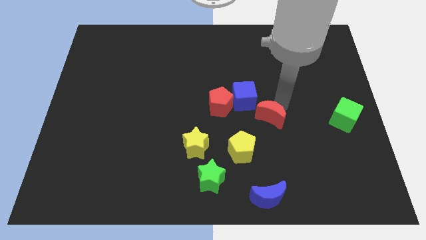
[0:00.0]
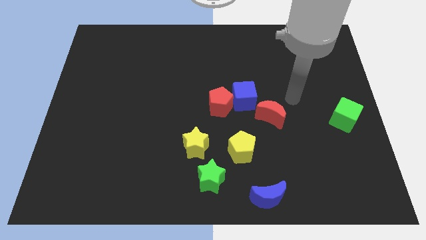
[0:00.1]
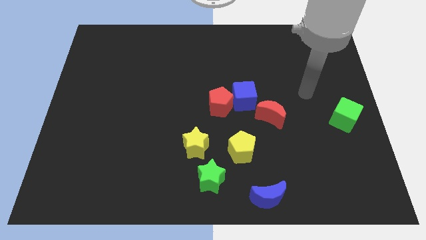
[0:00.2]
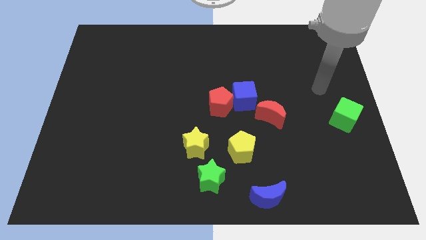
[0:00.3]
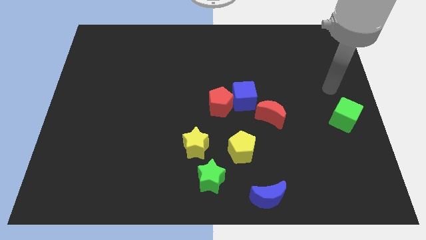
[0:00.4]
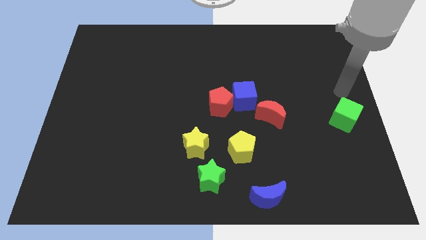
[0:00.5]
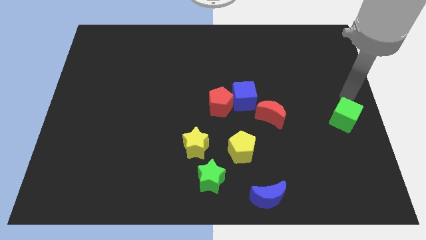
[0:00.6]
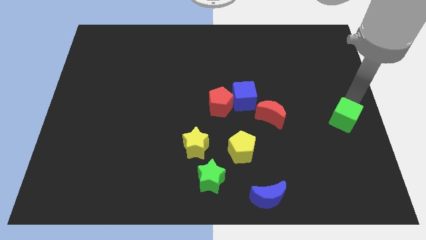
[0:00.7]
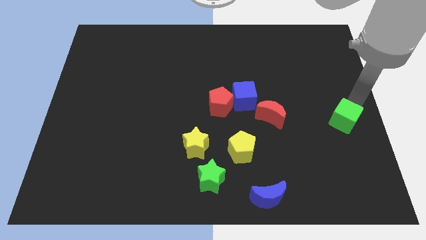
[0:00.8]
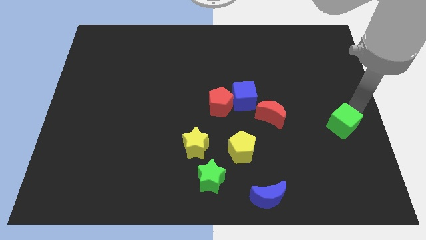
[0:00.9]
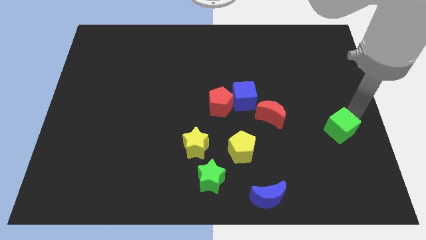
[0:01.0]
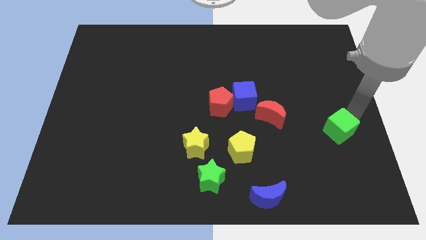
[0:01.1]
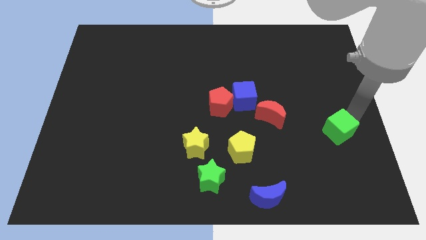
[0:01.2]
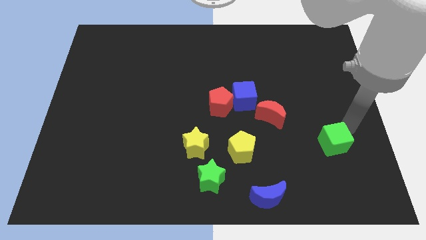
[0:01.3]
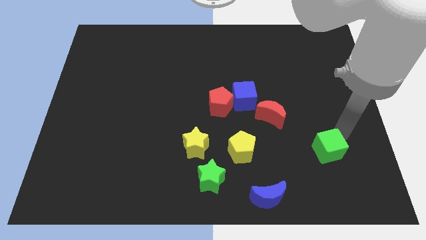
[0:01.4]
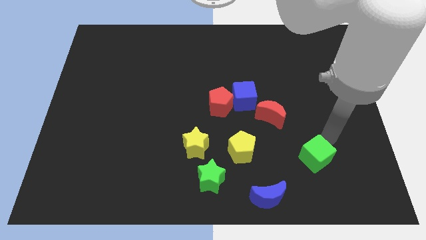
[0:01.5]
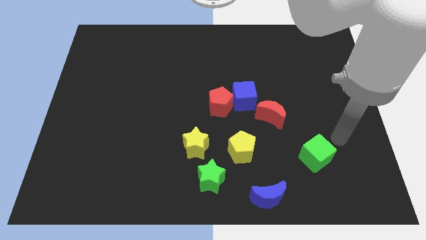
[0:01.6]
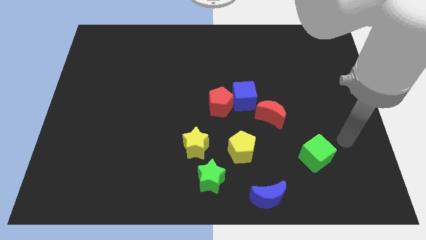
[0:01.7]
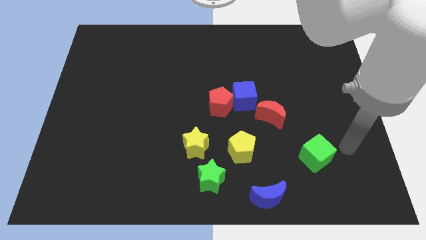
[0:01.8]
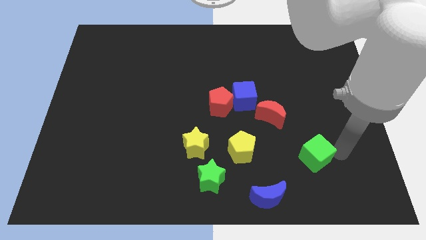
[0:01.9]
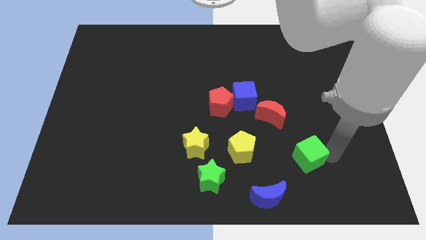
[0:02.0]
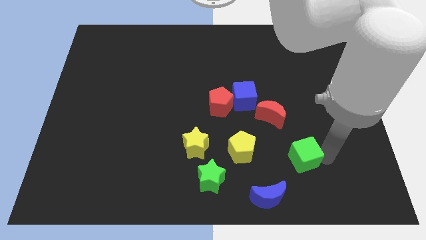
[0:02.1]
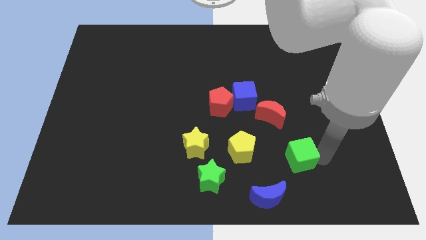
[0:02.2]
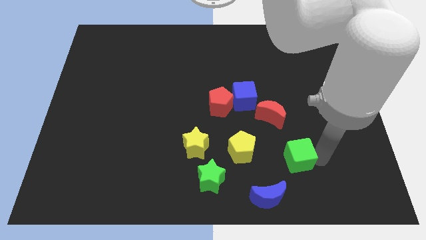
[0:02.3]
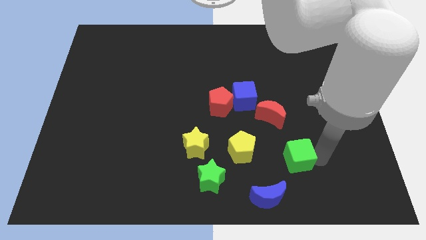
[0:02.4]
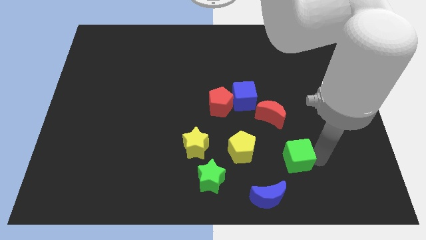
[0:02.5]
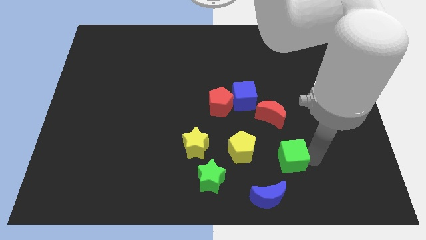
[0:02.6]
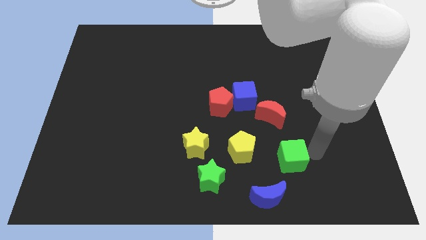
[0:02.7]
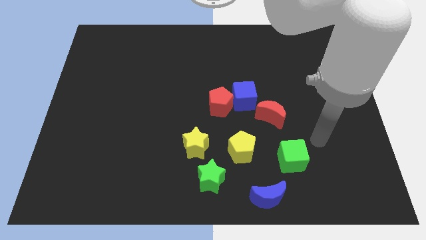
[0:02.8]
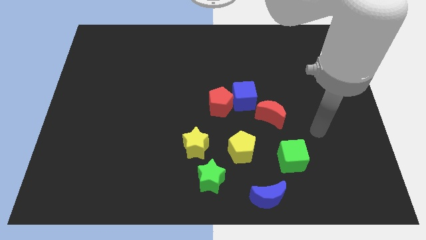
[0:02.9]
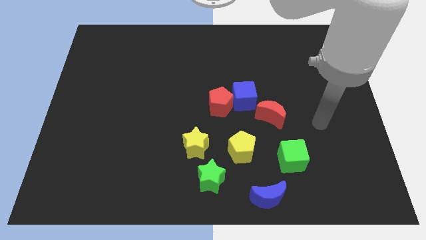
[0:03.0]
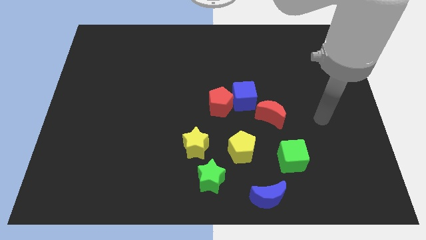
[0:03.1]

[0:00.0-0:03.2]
move the green cube at the top right side of the blue moon

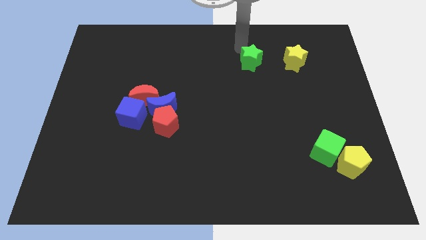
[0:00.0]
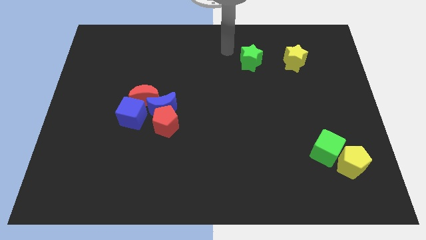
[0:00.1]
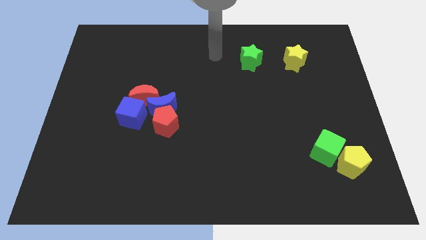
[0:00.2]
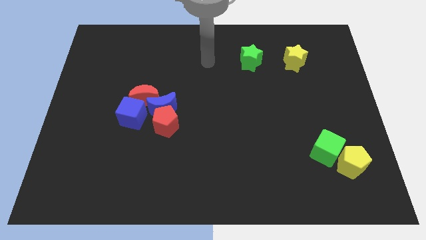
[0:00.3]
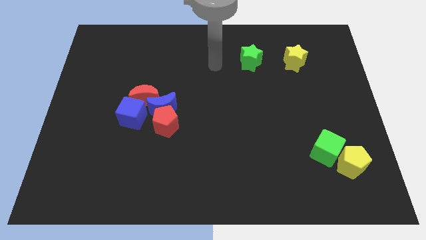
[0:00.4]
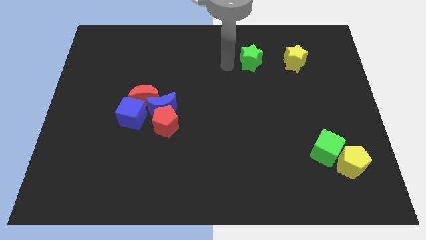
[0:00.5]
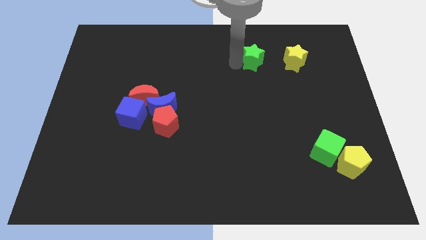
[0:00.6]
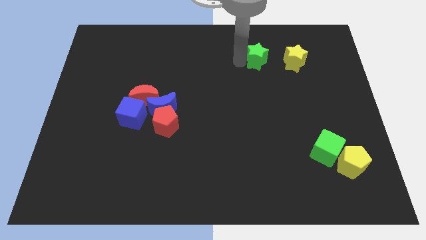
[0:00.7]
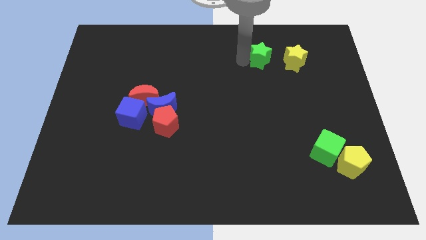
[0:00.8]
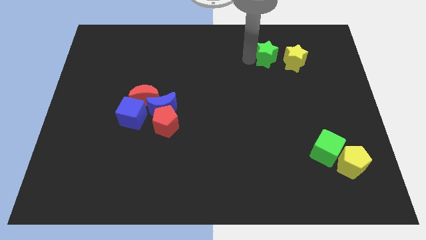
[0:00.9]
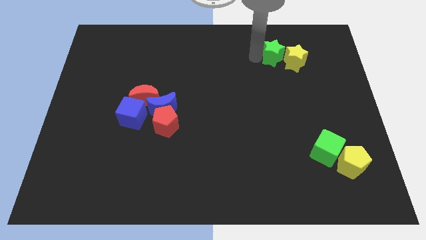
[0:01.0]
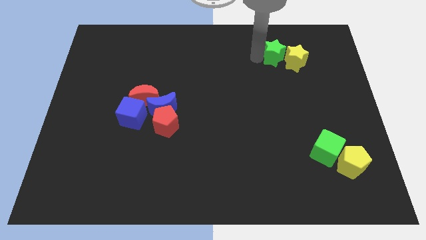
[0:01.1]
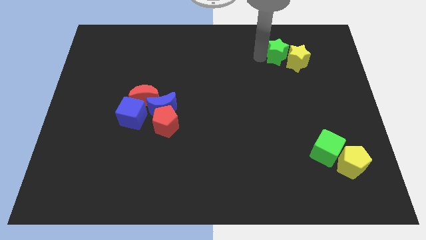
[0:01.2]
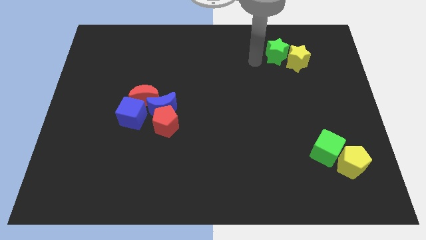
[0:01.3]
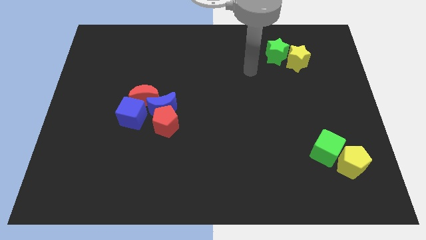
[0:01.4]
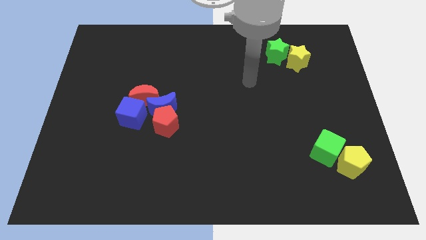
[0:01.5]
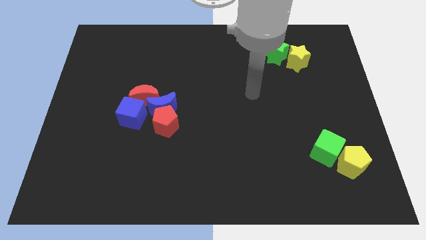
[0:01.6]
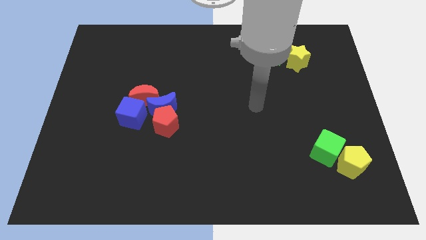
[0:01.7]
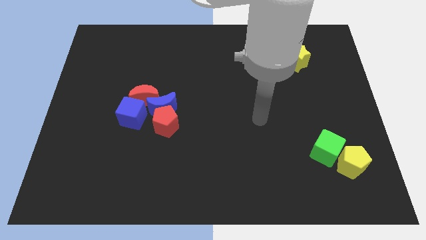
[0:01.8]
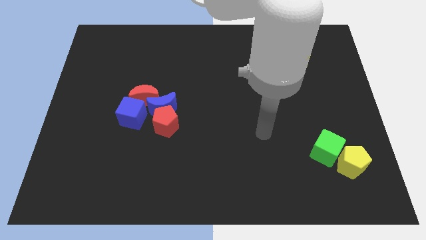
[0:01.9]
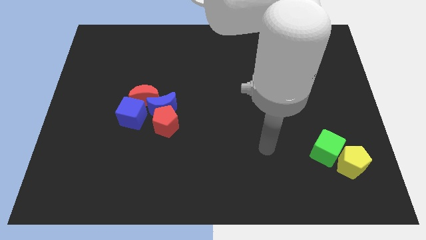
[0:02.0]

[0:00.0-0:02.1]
move green star close to yellow star

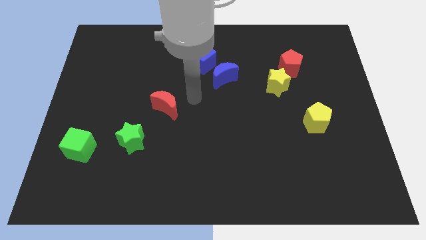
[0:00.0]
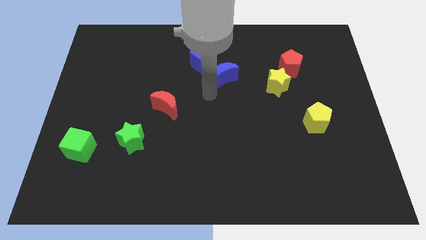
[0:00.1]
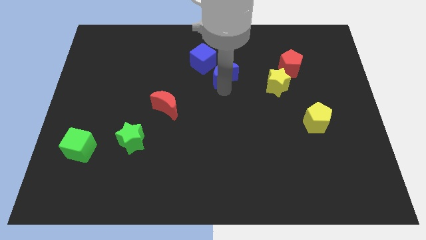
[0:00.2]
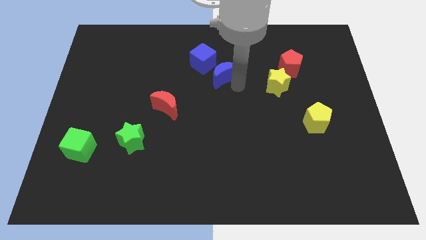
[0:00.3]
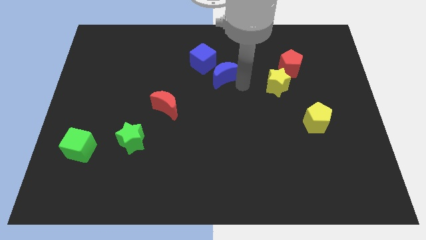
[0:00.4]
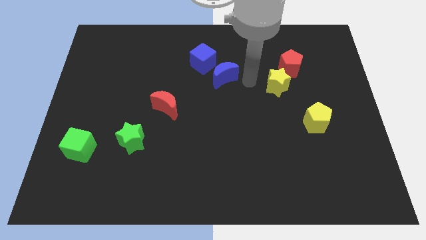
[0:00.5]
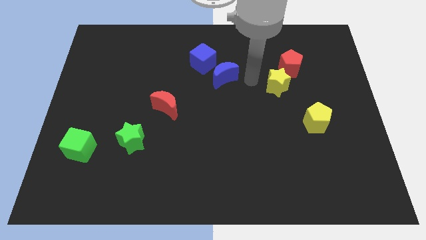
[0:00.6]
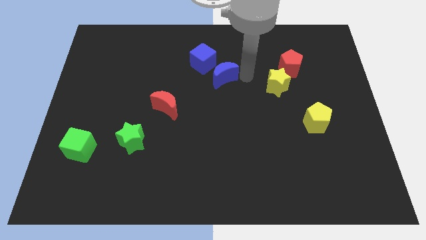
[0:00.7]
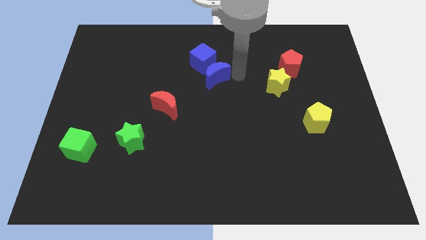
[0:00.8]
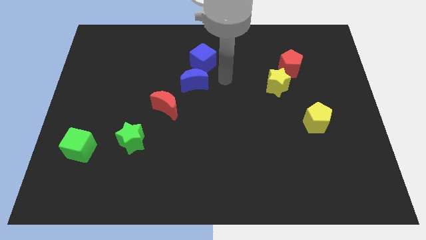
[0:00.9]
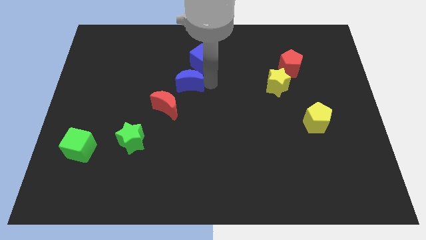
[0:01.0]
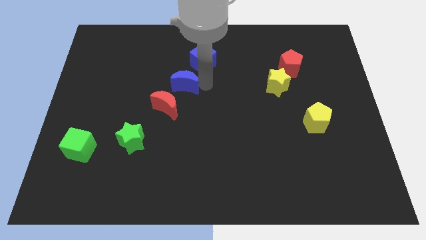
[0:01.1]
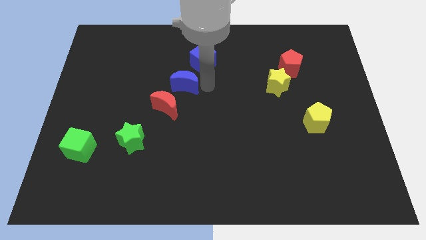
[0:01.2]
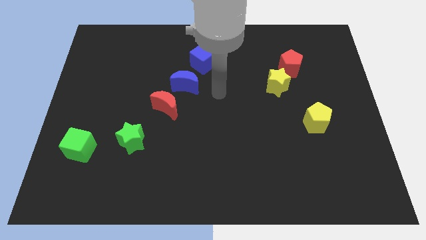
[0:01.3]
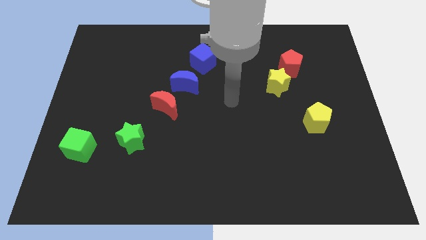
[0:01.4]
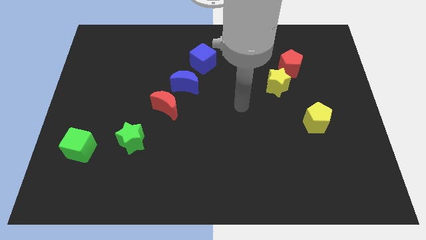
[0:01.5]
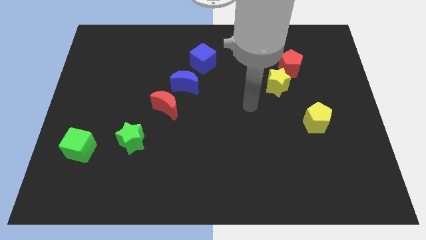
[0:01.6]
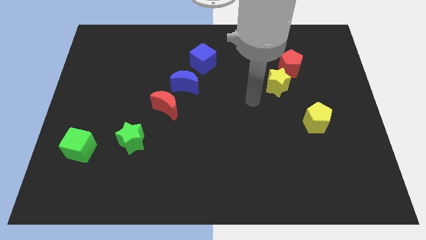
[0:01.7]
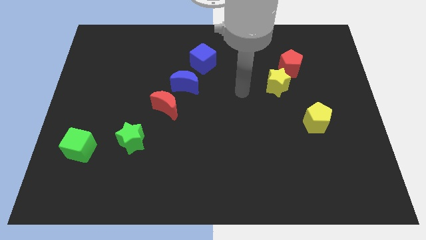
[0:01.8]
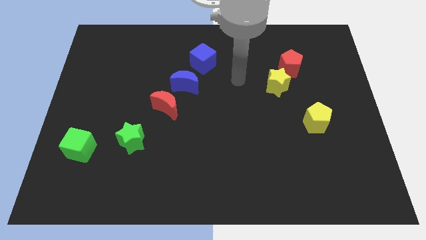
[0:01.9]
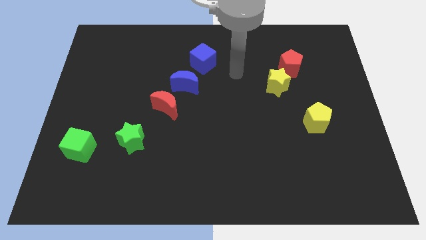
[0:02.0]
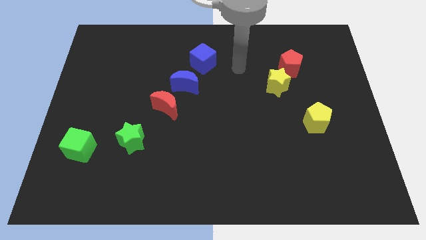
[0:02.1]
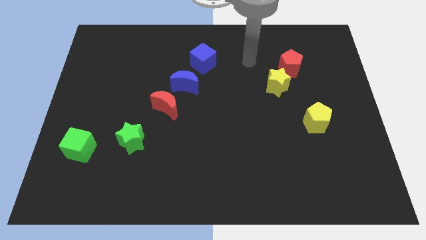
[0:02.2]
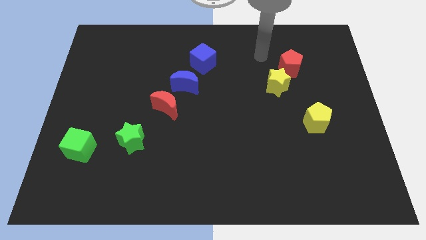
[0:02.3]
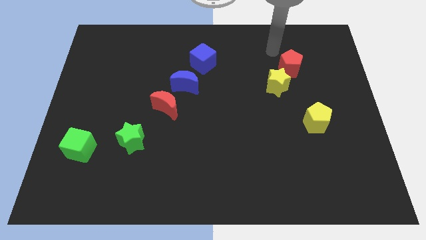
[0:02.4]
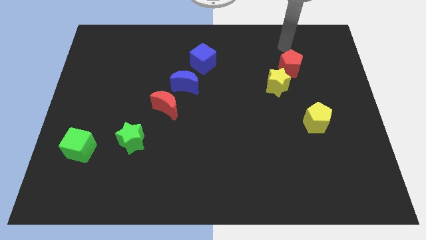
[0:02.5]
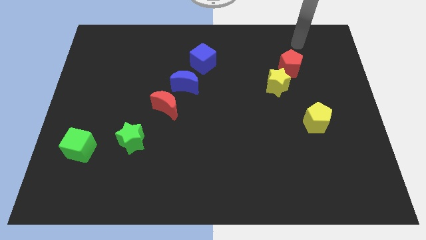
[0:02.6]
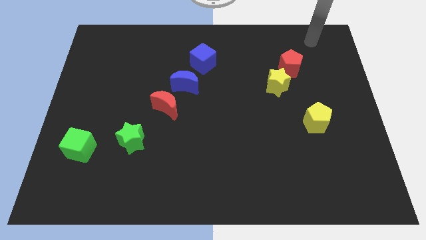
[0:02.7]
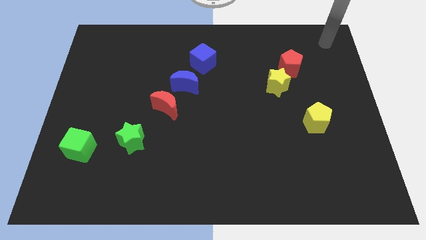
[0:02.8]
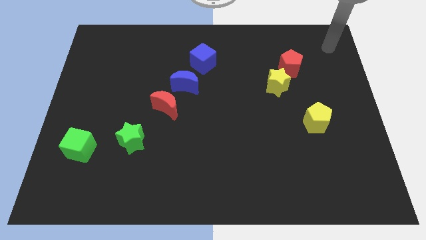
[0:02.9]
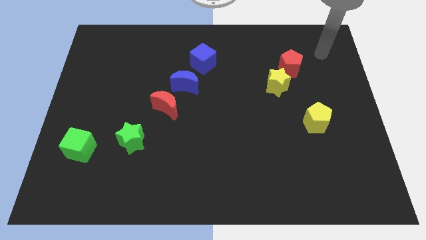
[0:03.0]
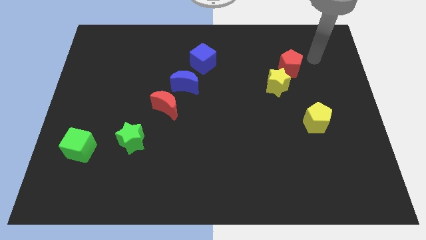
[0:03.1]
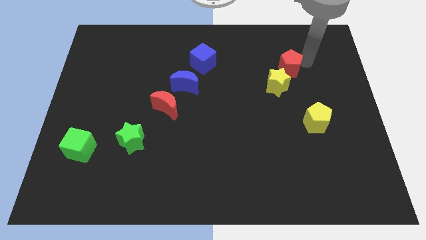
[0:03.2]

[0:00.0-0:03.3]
push the blue crescent to the top right to the red crescent

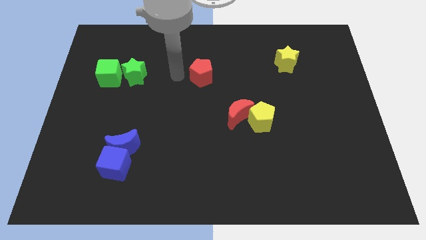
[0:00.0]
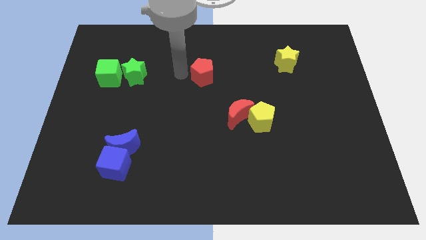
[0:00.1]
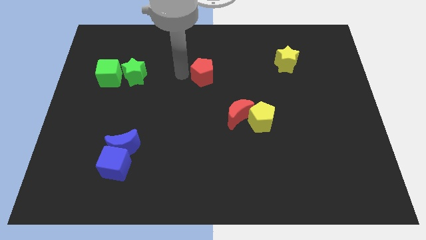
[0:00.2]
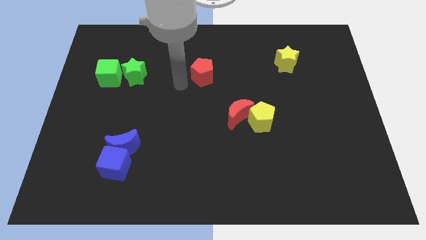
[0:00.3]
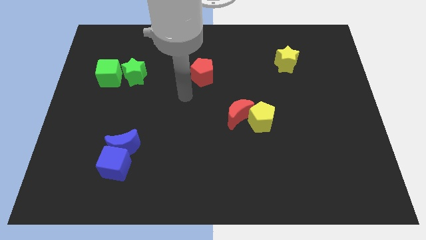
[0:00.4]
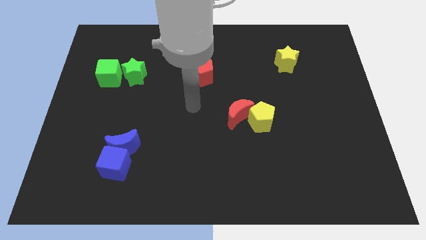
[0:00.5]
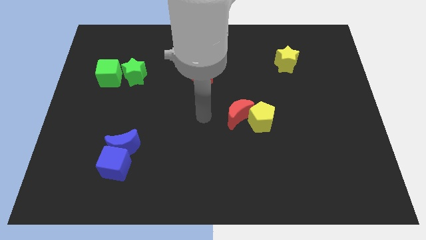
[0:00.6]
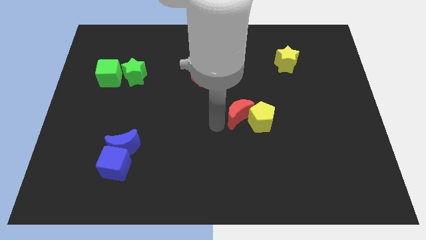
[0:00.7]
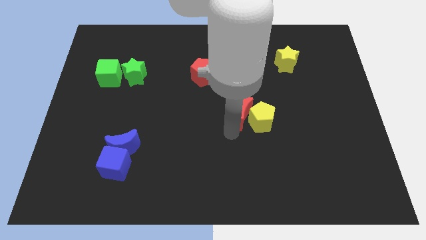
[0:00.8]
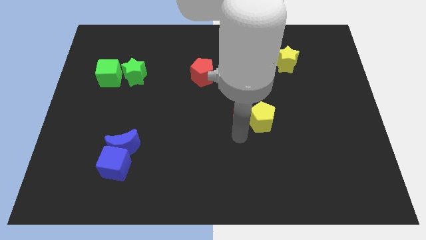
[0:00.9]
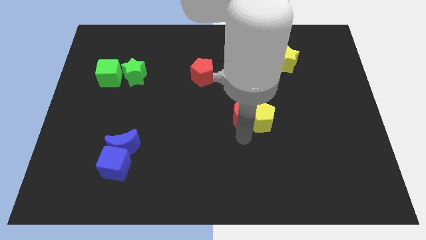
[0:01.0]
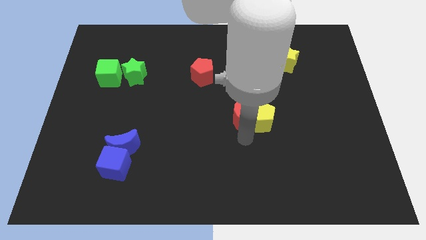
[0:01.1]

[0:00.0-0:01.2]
move your arm towards the bottom of the yellow pentagon
